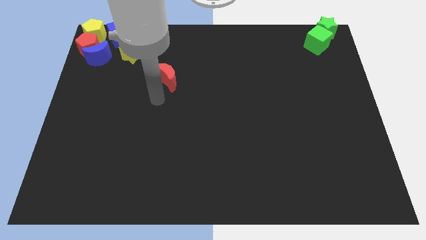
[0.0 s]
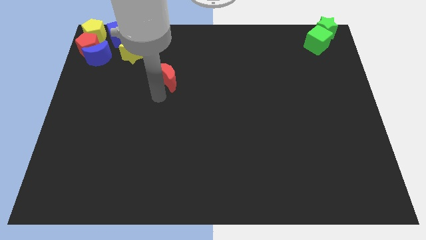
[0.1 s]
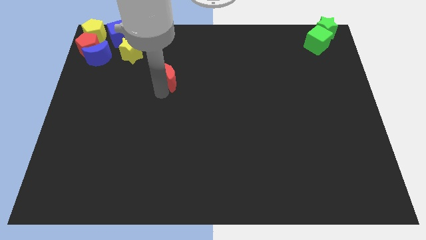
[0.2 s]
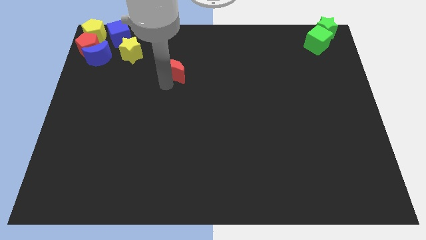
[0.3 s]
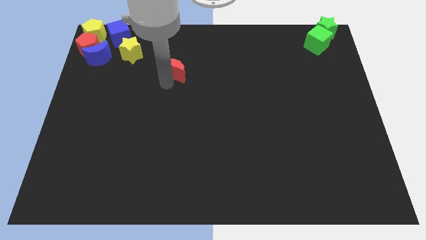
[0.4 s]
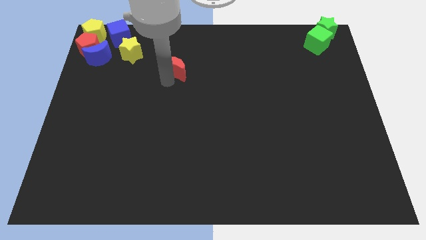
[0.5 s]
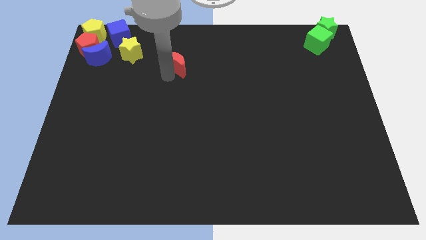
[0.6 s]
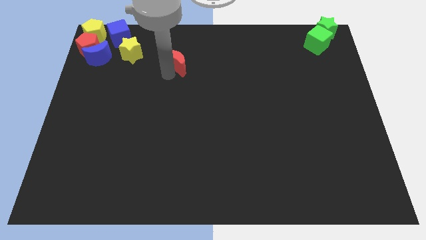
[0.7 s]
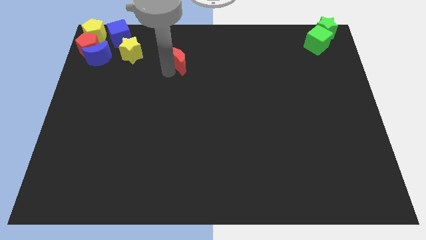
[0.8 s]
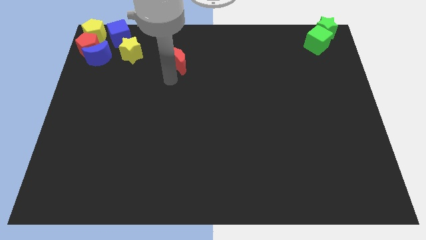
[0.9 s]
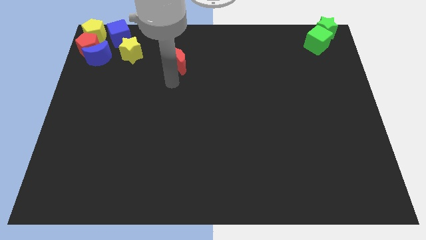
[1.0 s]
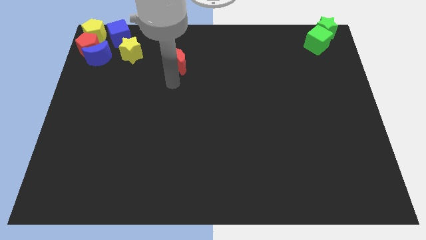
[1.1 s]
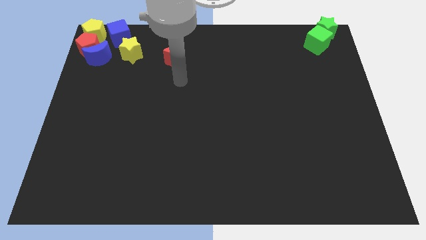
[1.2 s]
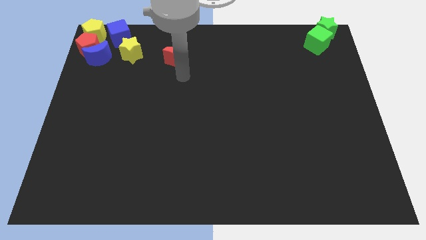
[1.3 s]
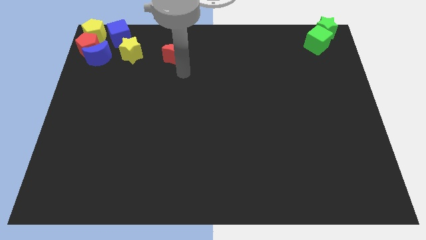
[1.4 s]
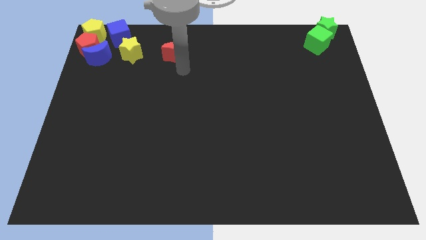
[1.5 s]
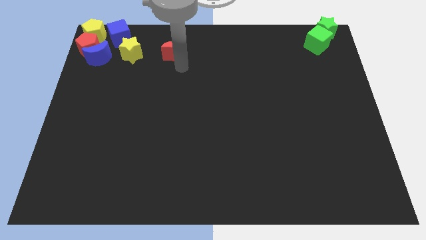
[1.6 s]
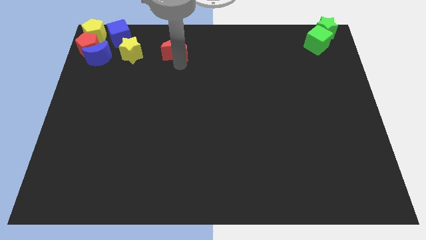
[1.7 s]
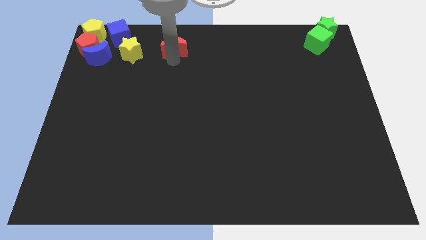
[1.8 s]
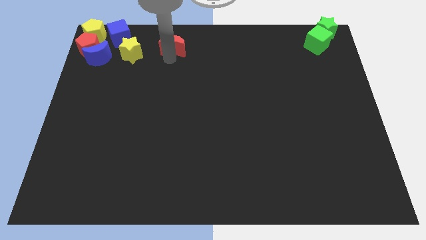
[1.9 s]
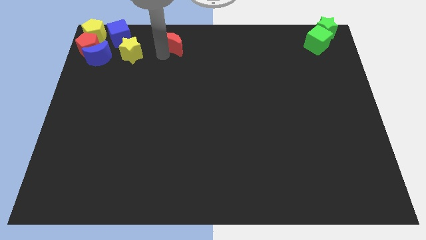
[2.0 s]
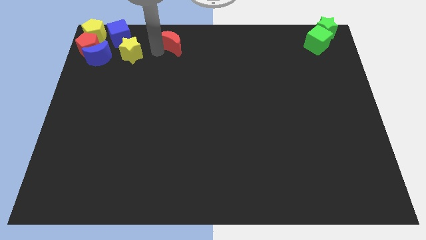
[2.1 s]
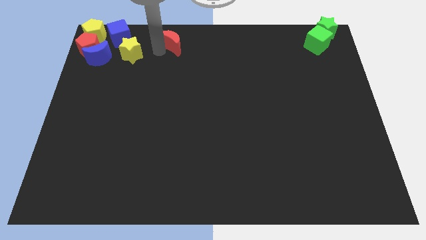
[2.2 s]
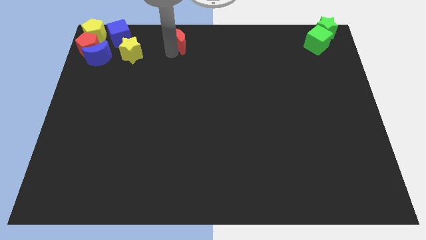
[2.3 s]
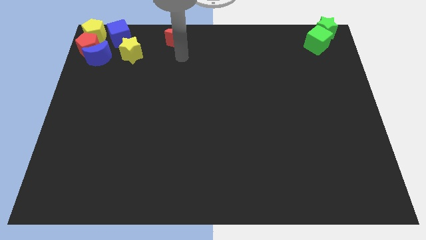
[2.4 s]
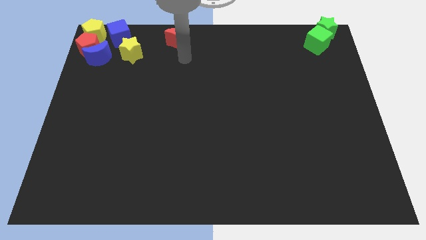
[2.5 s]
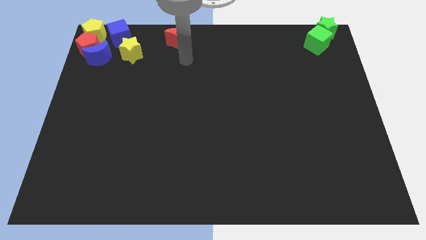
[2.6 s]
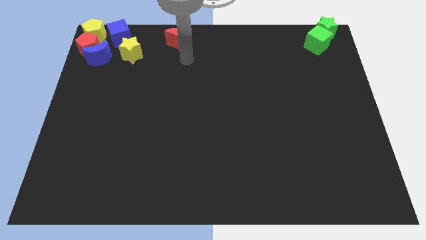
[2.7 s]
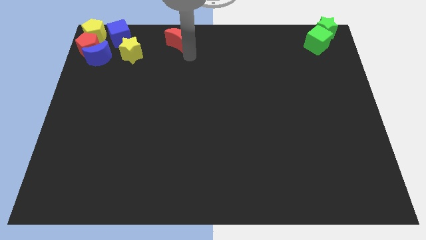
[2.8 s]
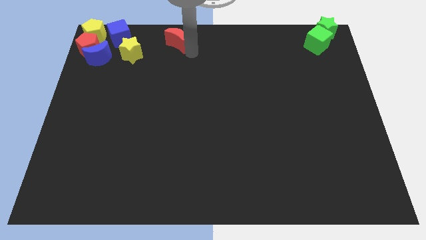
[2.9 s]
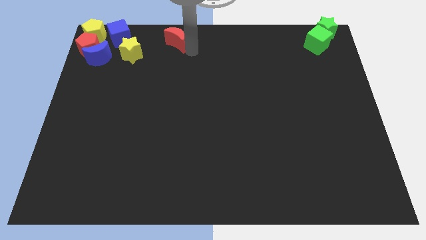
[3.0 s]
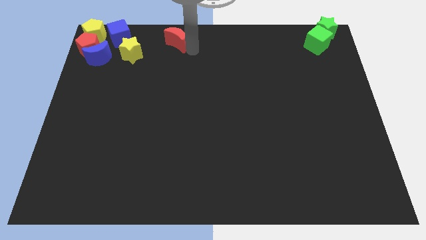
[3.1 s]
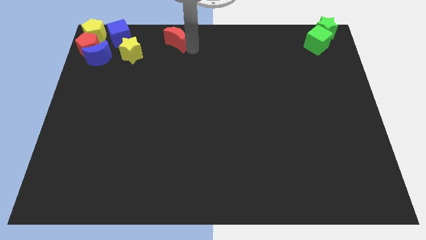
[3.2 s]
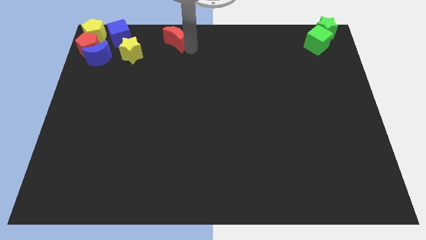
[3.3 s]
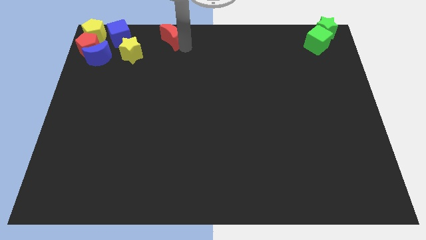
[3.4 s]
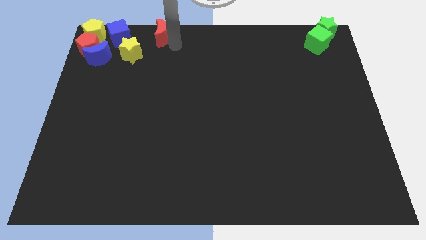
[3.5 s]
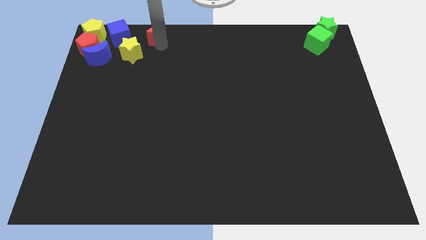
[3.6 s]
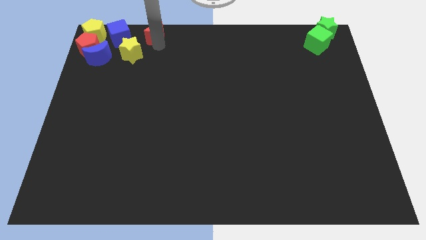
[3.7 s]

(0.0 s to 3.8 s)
slide the red crescent towards the right side of the group of blocks

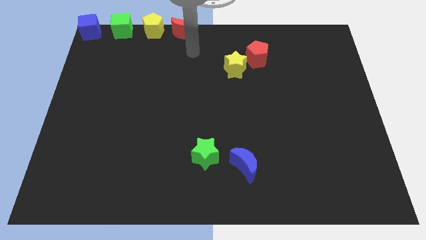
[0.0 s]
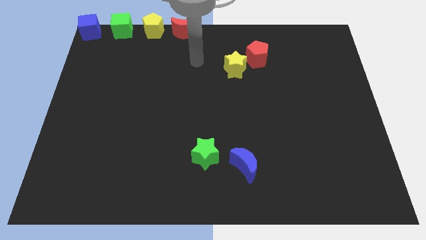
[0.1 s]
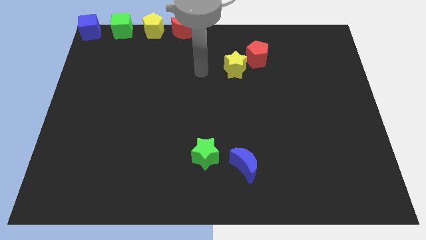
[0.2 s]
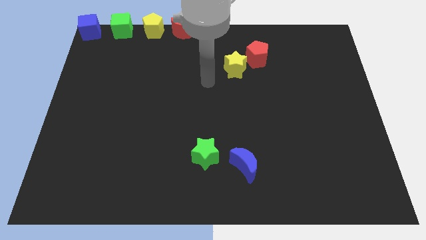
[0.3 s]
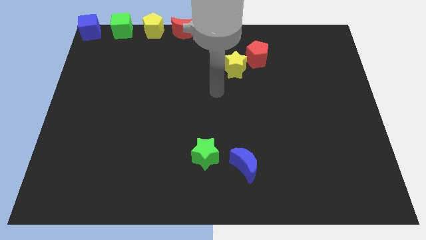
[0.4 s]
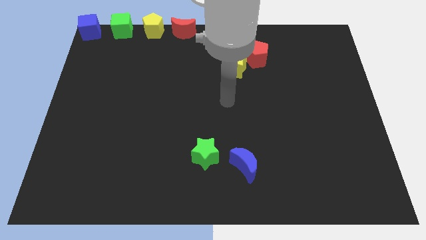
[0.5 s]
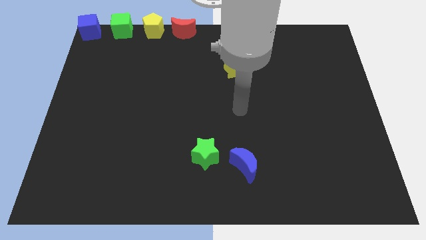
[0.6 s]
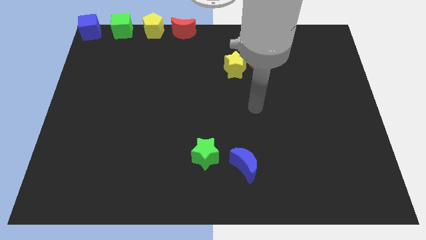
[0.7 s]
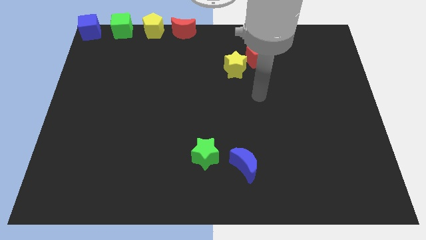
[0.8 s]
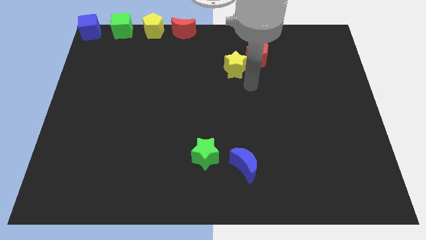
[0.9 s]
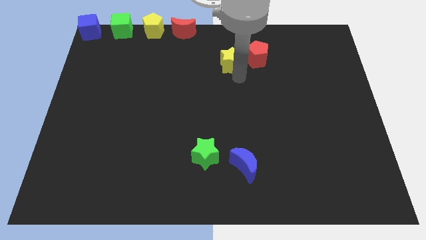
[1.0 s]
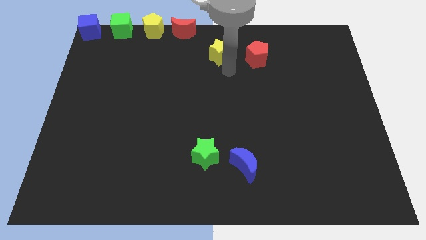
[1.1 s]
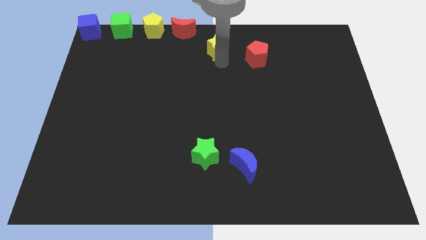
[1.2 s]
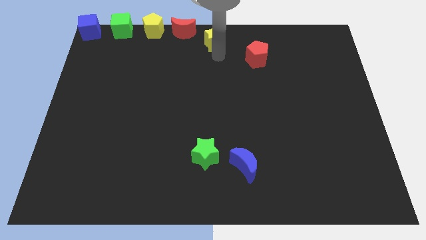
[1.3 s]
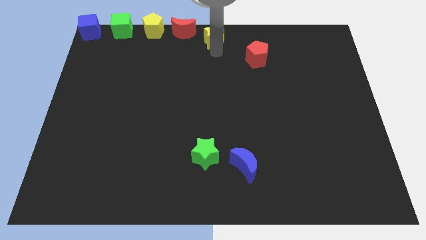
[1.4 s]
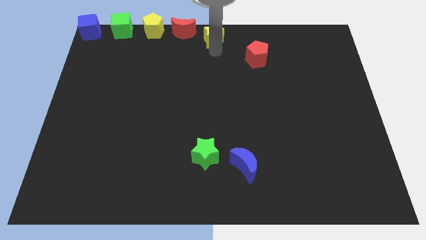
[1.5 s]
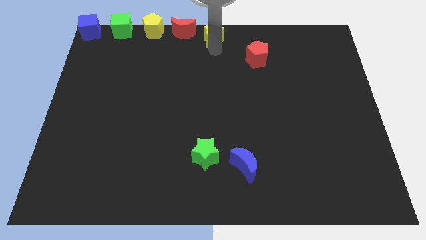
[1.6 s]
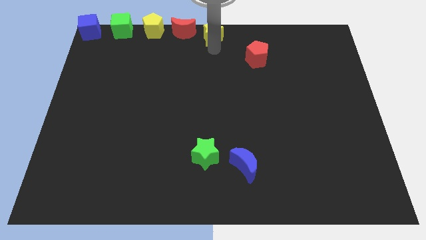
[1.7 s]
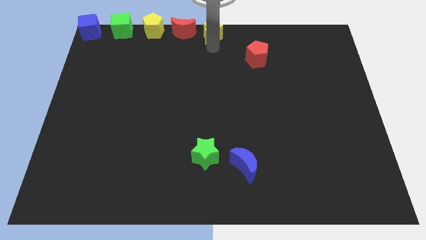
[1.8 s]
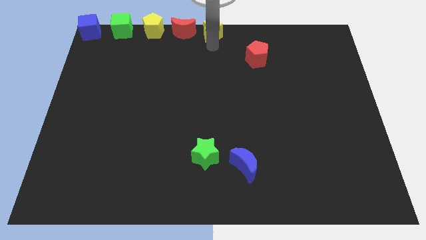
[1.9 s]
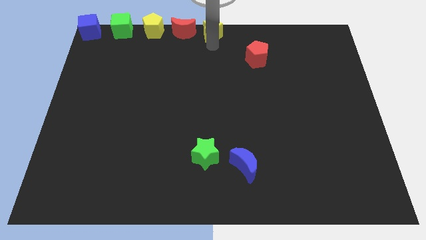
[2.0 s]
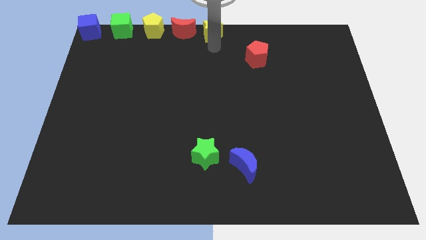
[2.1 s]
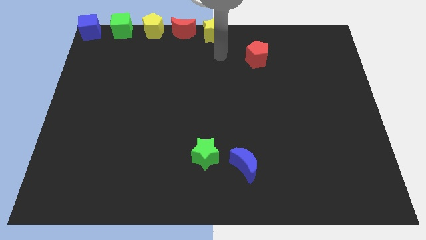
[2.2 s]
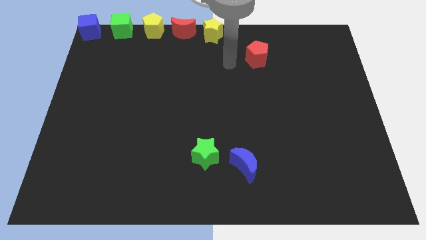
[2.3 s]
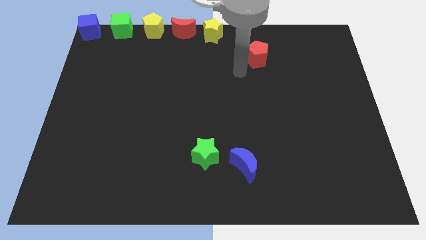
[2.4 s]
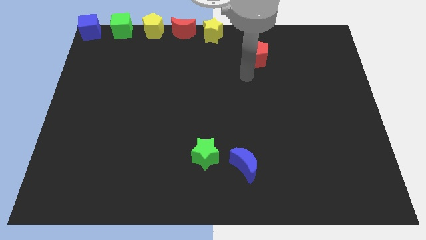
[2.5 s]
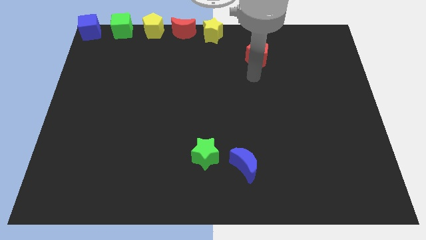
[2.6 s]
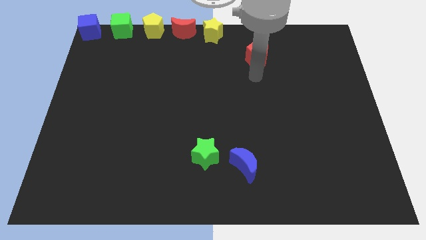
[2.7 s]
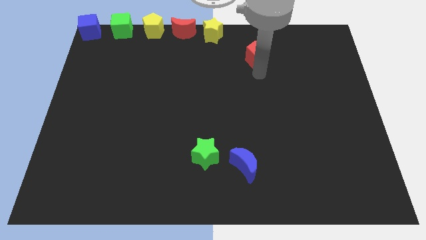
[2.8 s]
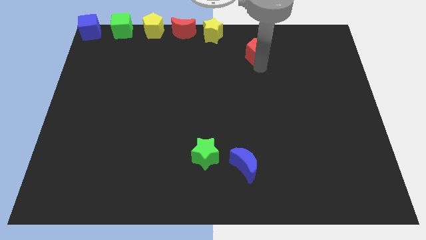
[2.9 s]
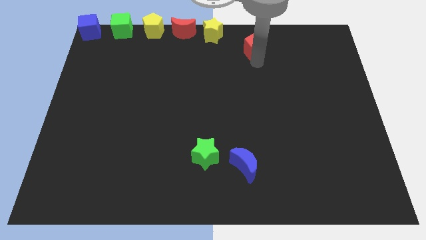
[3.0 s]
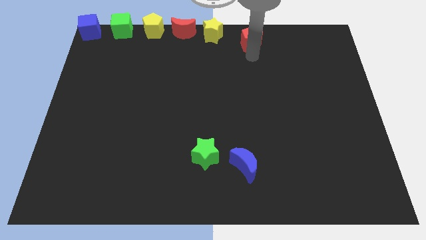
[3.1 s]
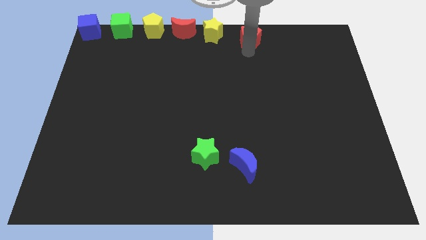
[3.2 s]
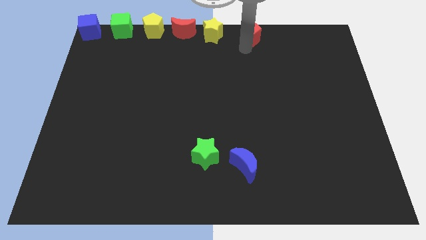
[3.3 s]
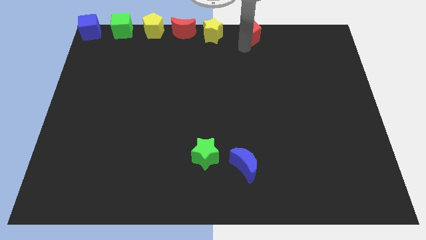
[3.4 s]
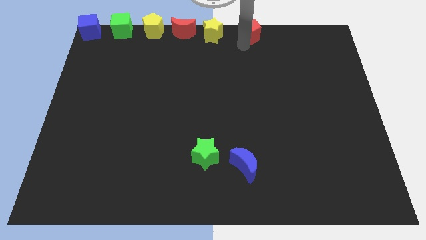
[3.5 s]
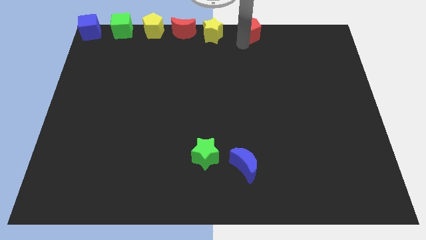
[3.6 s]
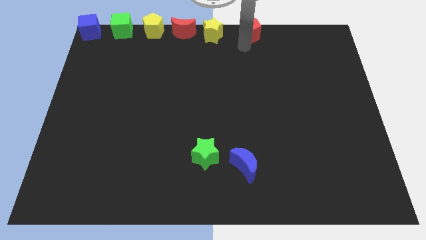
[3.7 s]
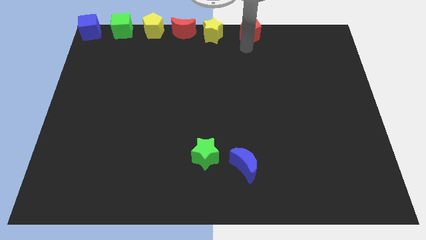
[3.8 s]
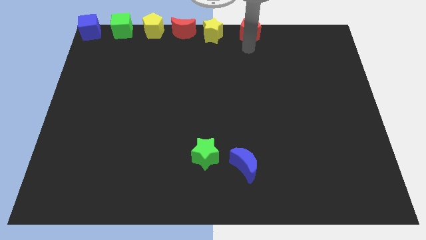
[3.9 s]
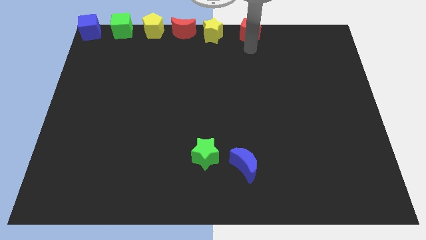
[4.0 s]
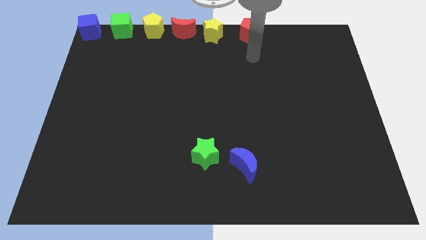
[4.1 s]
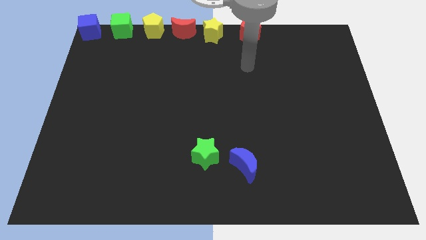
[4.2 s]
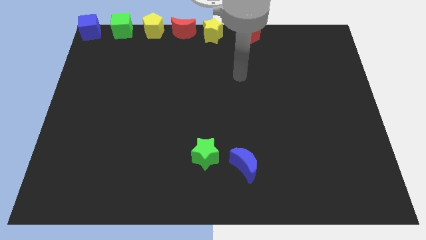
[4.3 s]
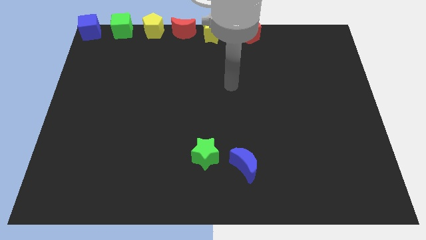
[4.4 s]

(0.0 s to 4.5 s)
place the yellow star and the red pentagon to the right of the red crescent

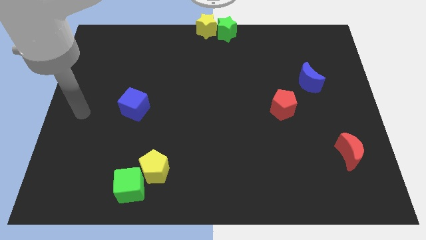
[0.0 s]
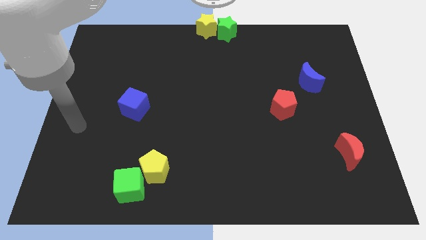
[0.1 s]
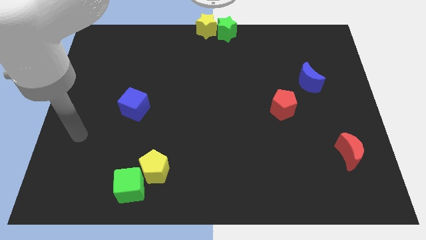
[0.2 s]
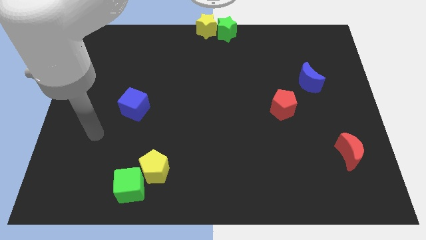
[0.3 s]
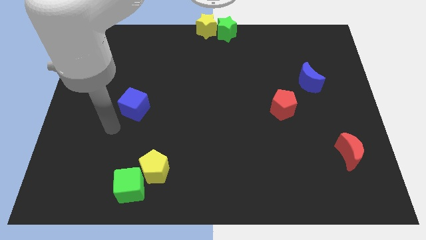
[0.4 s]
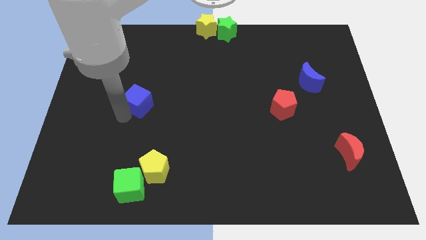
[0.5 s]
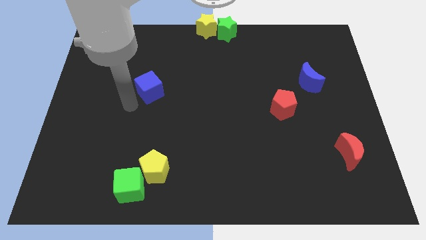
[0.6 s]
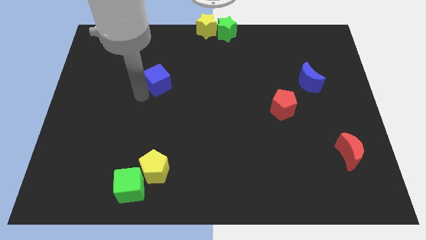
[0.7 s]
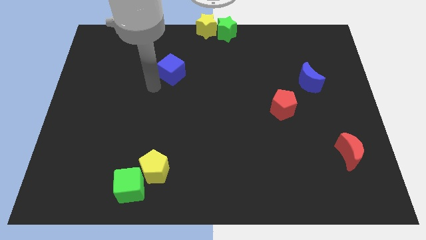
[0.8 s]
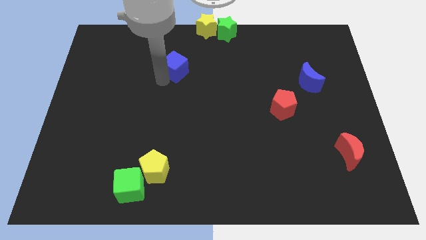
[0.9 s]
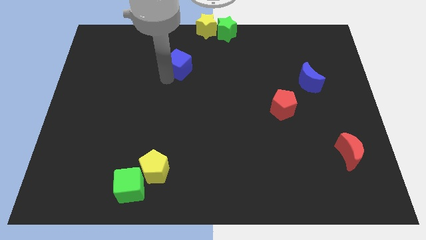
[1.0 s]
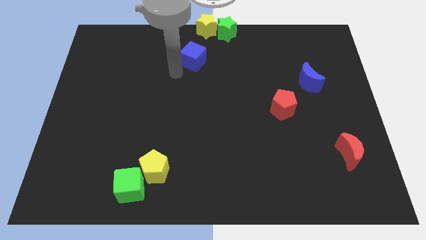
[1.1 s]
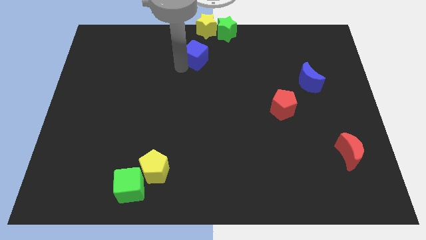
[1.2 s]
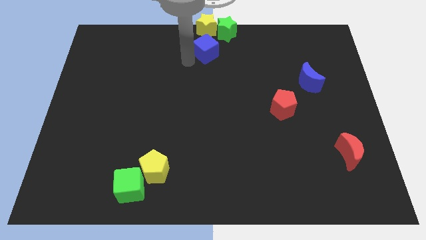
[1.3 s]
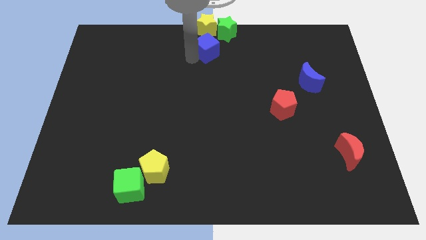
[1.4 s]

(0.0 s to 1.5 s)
place the blue cube vertically below the yellow star
